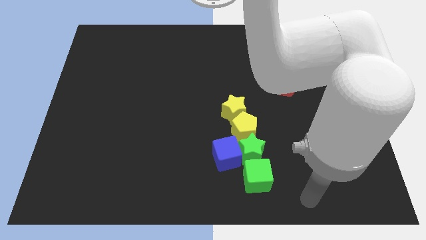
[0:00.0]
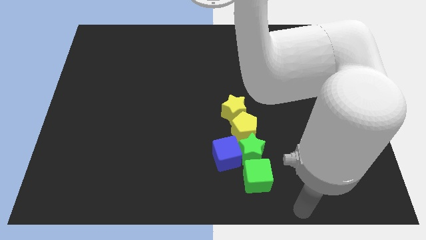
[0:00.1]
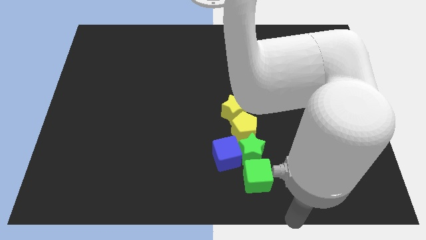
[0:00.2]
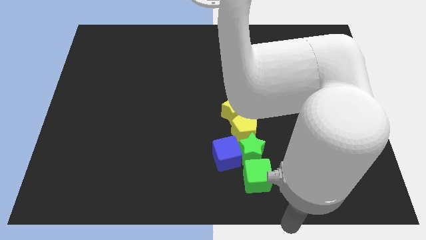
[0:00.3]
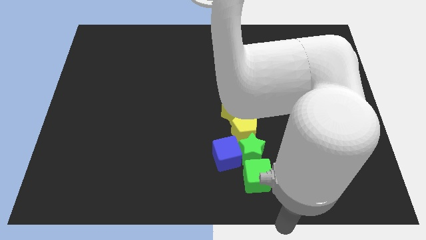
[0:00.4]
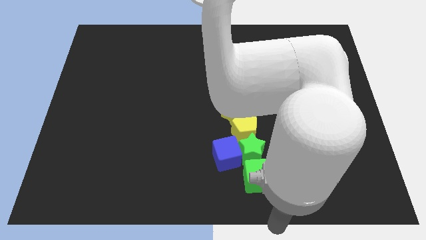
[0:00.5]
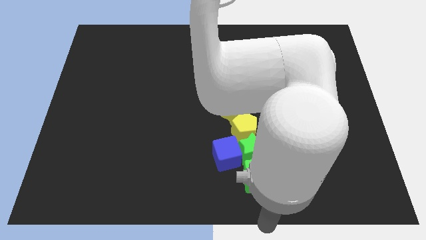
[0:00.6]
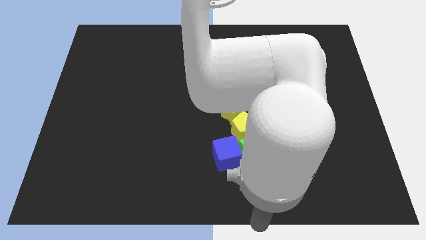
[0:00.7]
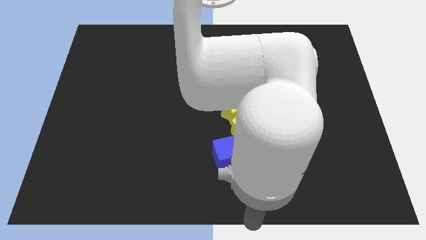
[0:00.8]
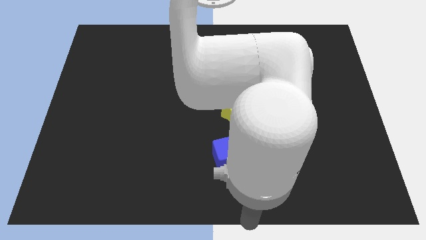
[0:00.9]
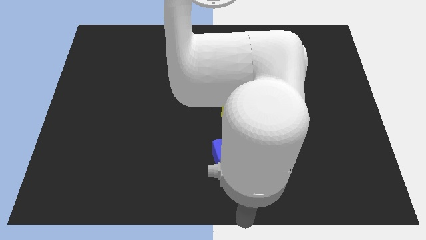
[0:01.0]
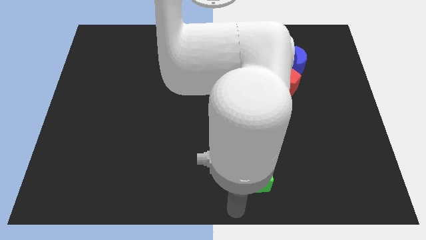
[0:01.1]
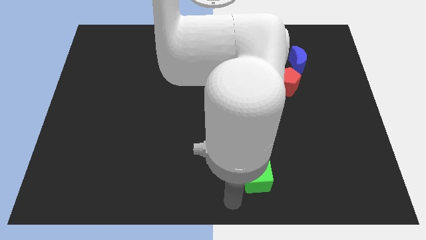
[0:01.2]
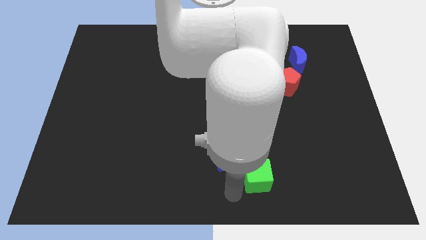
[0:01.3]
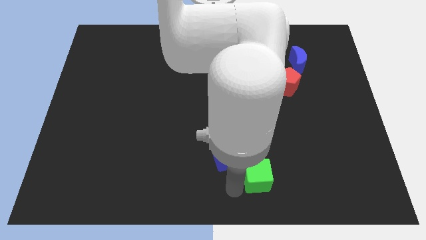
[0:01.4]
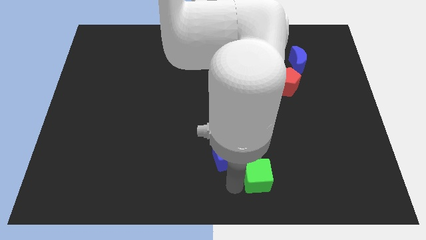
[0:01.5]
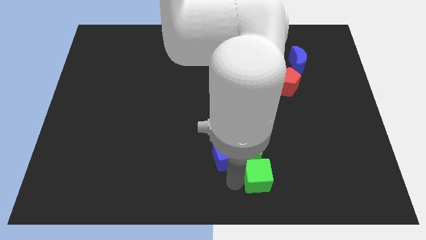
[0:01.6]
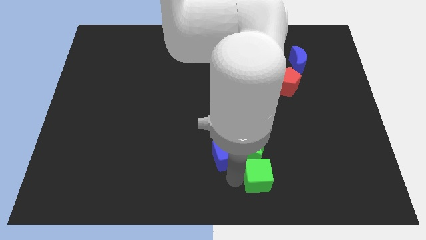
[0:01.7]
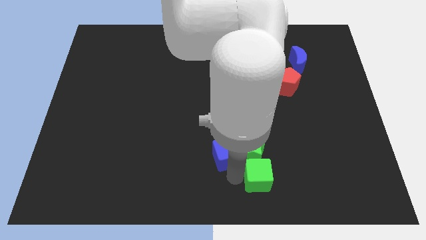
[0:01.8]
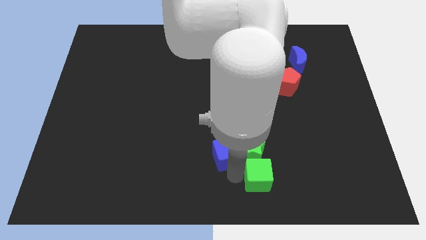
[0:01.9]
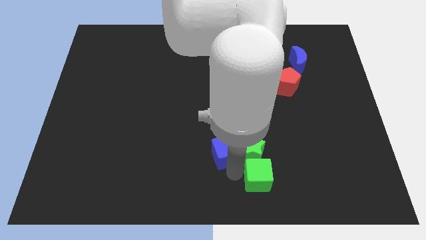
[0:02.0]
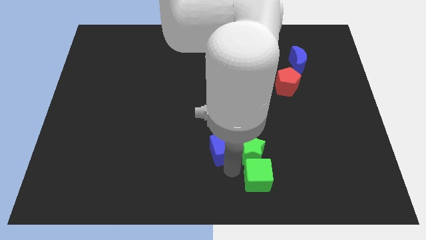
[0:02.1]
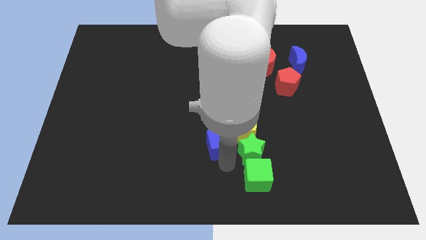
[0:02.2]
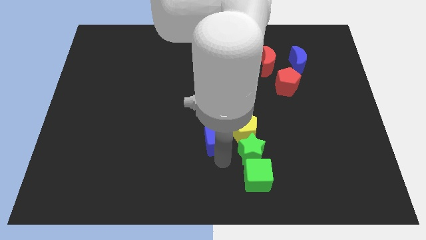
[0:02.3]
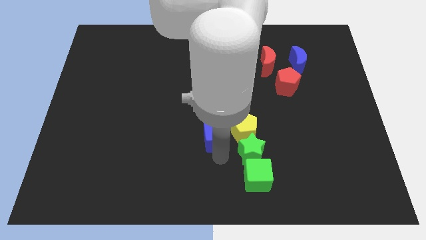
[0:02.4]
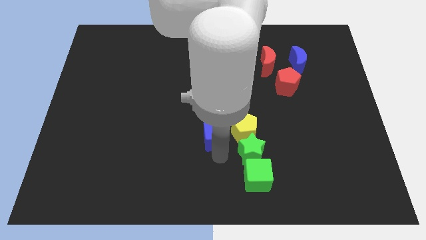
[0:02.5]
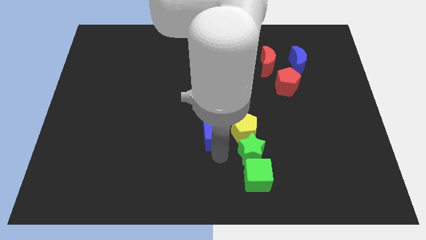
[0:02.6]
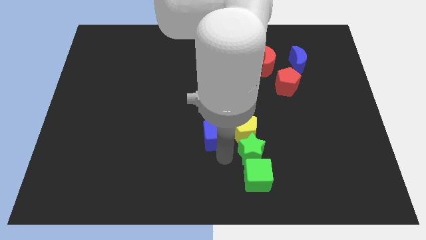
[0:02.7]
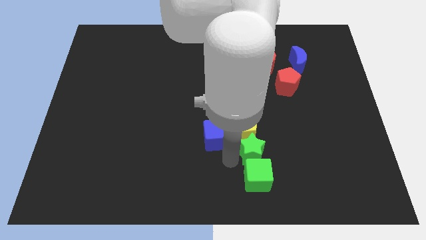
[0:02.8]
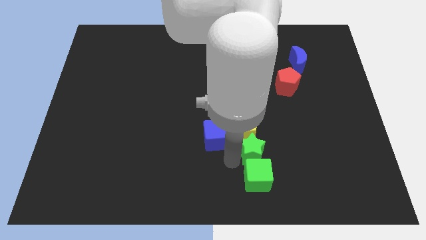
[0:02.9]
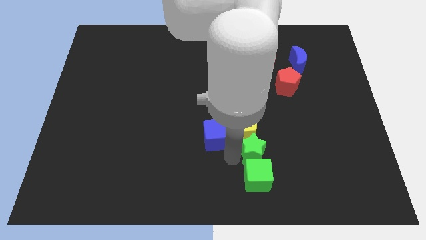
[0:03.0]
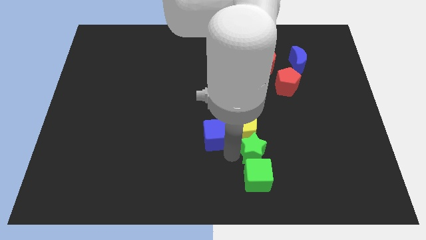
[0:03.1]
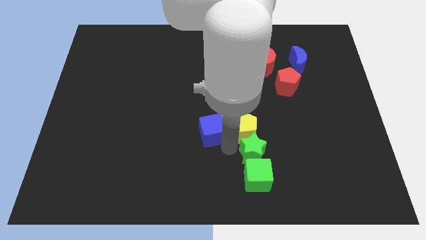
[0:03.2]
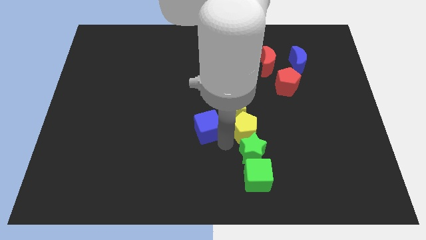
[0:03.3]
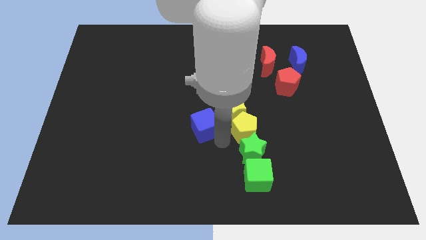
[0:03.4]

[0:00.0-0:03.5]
separate the blue cube and green star

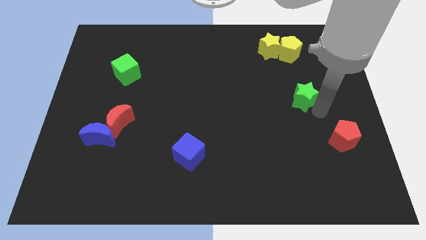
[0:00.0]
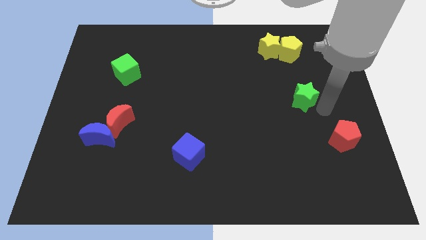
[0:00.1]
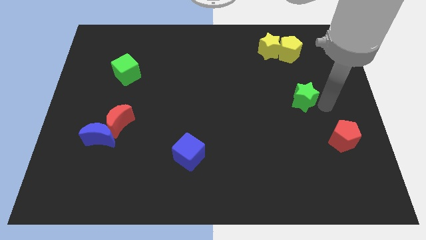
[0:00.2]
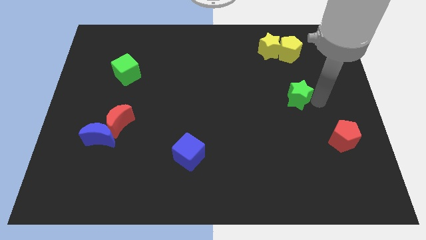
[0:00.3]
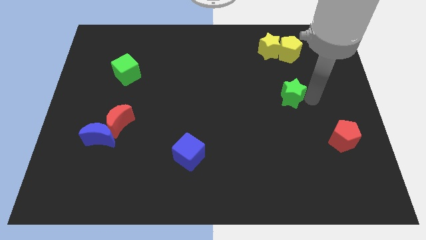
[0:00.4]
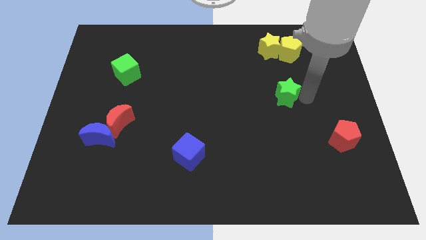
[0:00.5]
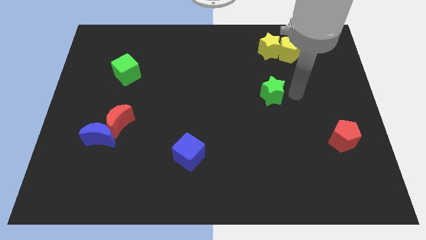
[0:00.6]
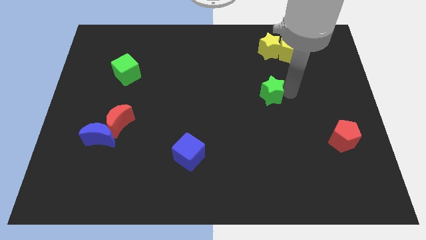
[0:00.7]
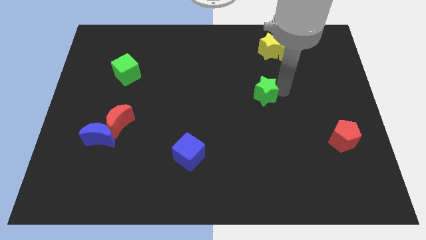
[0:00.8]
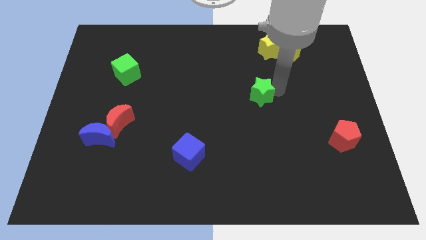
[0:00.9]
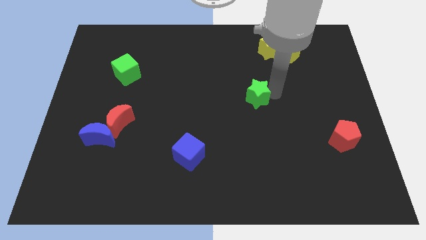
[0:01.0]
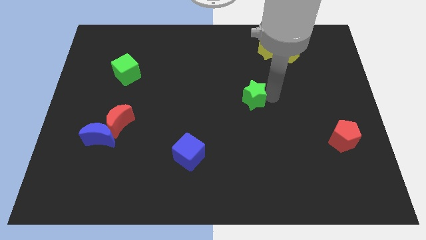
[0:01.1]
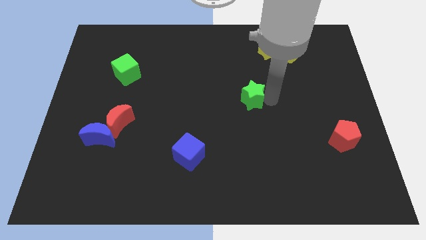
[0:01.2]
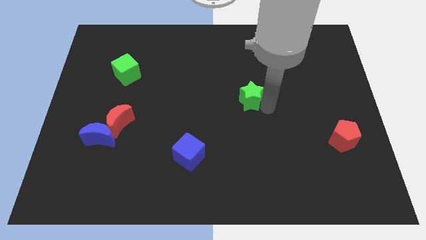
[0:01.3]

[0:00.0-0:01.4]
push the green star towards the center of the board

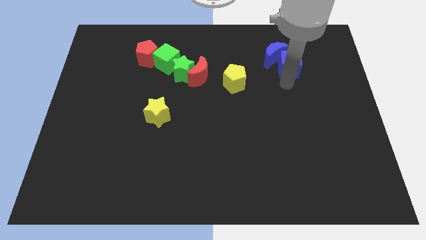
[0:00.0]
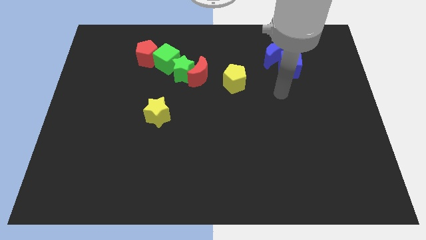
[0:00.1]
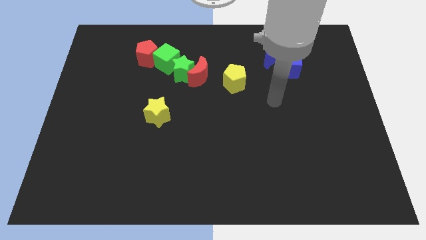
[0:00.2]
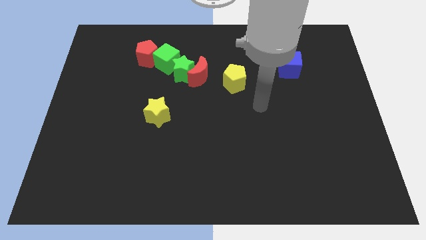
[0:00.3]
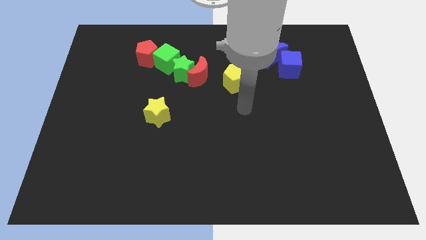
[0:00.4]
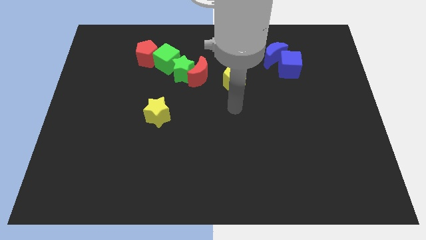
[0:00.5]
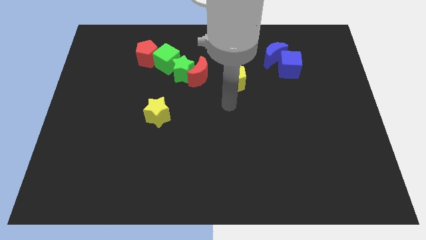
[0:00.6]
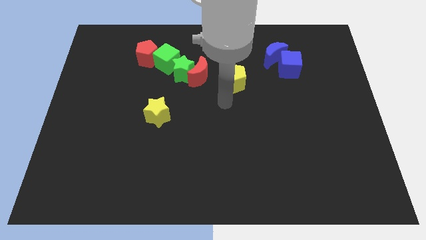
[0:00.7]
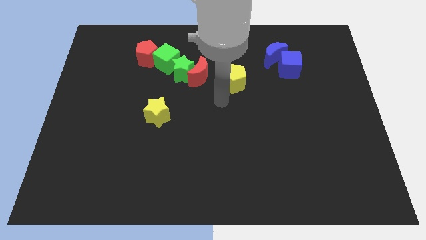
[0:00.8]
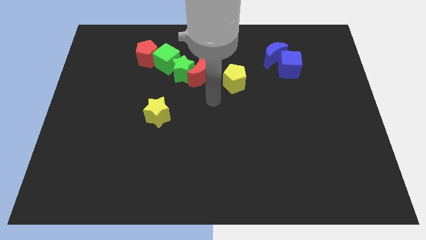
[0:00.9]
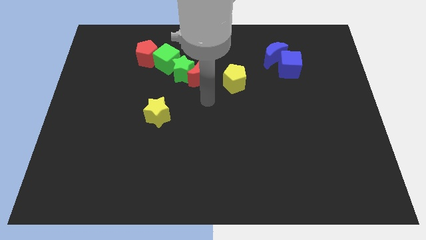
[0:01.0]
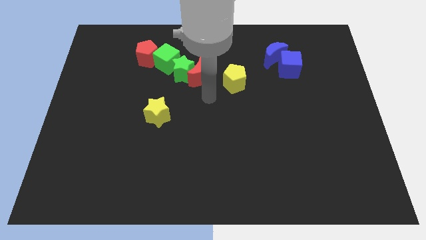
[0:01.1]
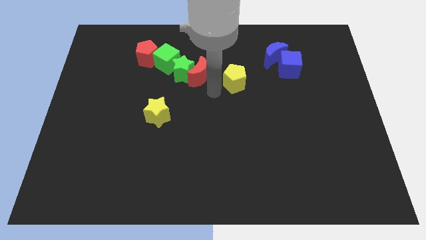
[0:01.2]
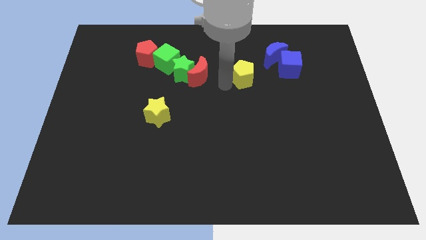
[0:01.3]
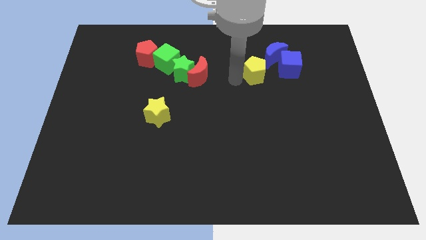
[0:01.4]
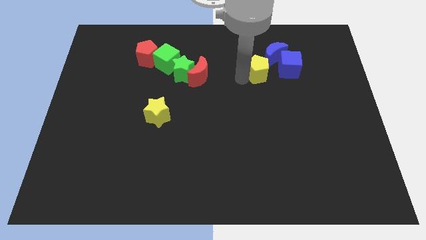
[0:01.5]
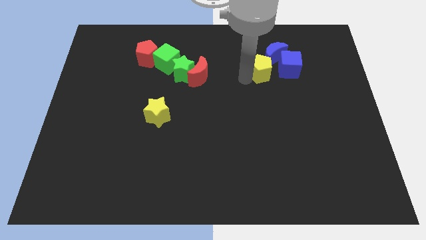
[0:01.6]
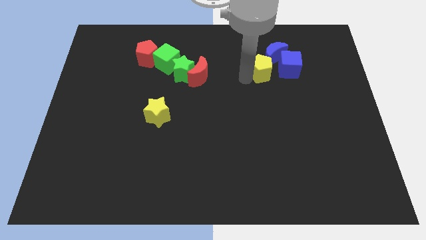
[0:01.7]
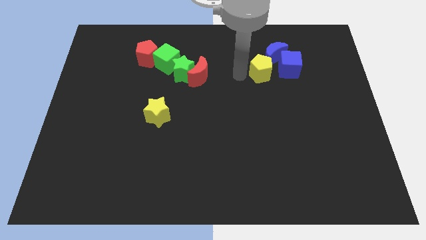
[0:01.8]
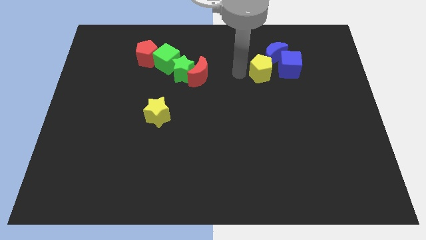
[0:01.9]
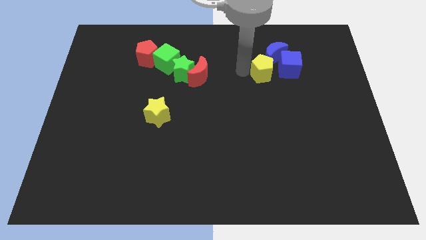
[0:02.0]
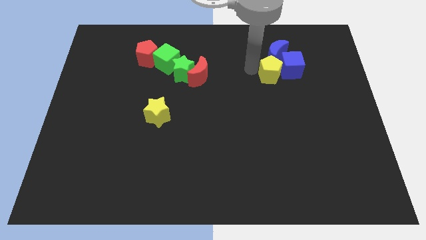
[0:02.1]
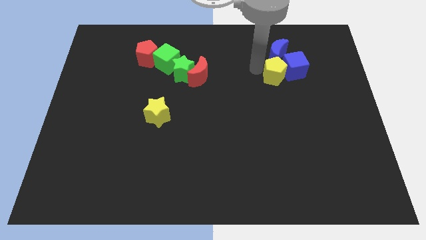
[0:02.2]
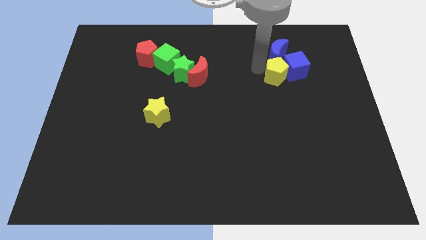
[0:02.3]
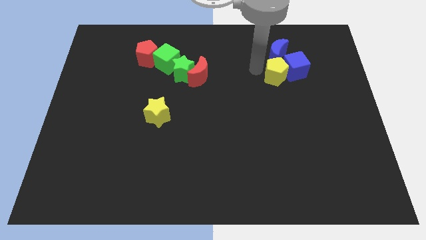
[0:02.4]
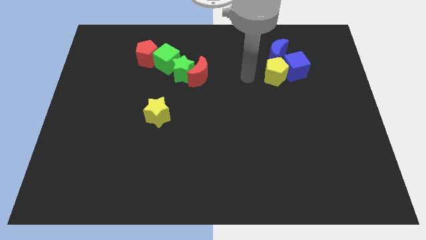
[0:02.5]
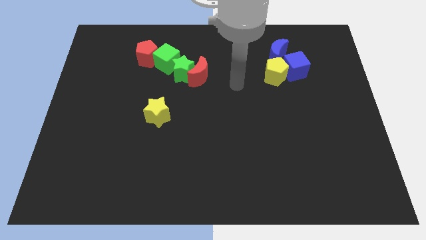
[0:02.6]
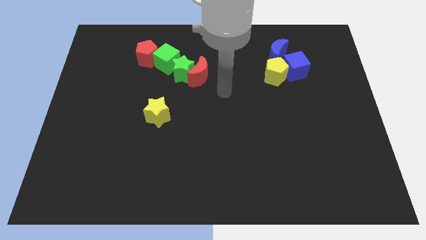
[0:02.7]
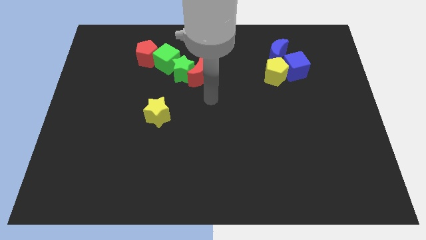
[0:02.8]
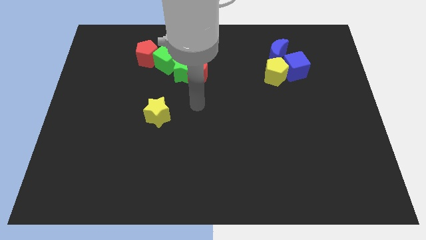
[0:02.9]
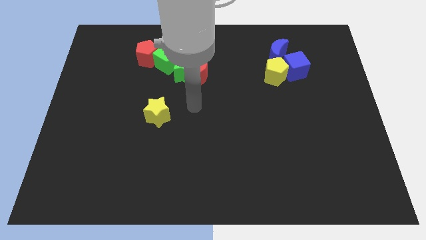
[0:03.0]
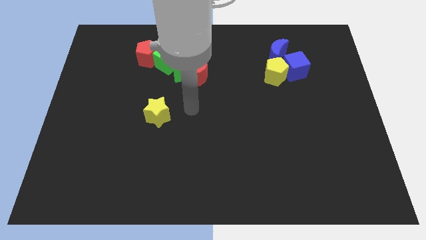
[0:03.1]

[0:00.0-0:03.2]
slide the yellow pentagon into the blue cube

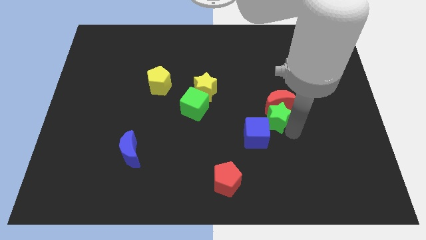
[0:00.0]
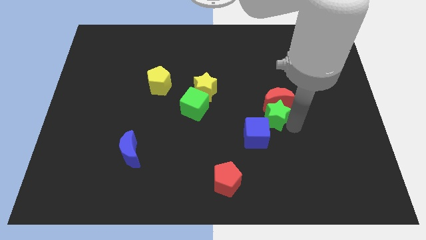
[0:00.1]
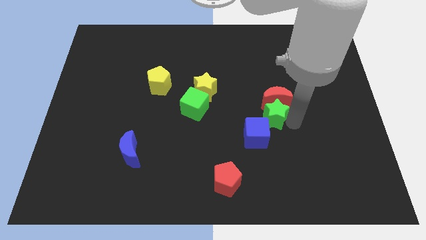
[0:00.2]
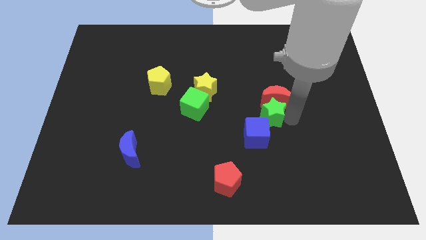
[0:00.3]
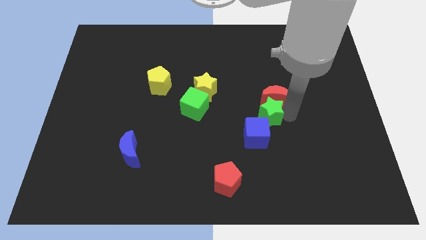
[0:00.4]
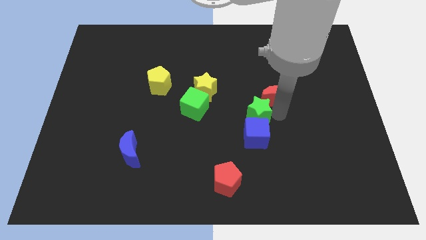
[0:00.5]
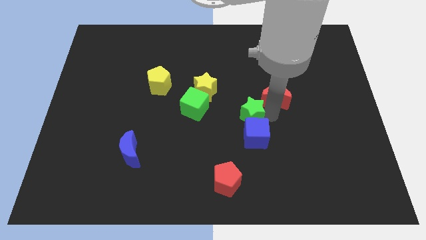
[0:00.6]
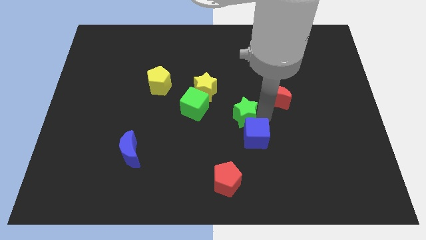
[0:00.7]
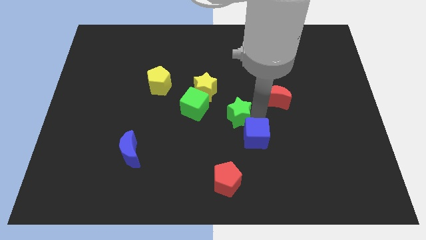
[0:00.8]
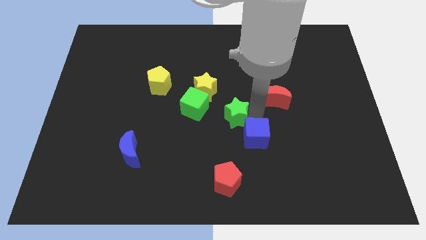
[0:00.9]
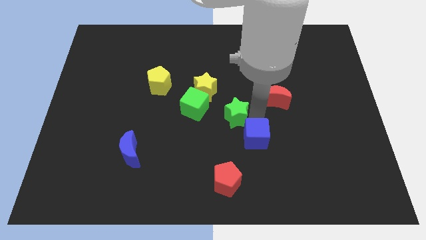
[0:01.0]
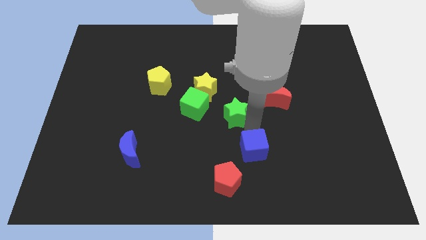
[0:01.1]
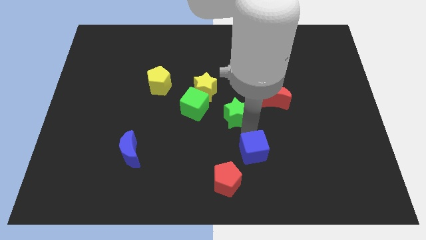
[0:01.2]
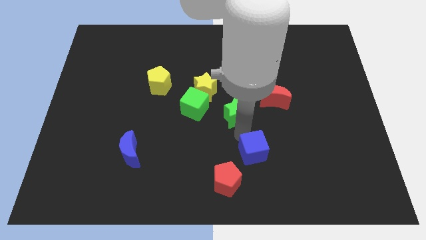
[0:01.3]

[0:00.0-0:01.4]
move the green star towards the bottom of the green cube
